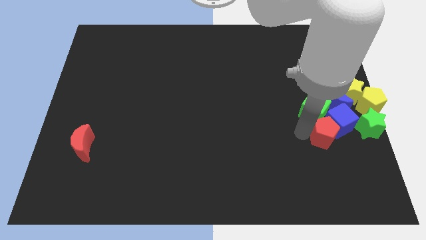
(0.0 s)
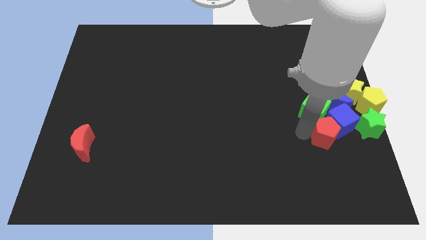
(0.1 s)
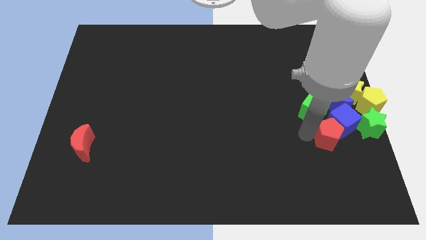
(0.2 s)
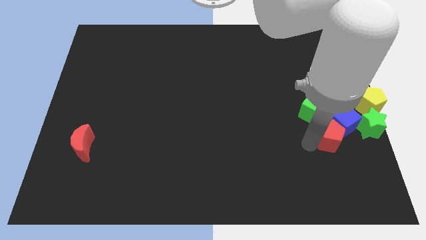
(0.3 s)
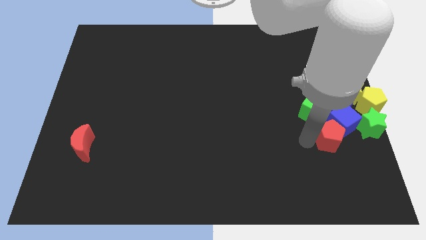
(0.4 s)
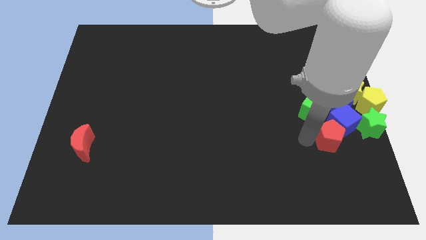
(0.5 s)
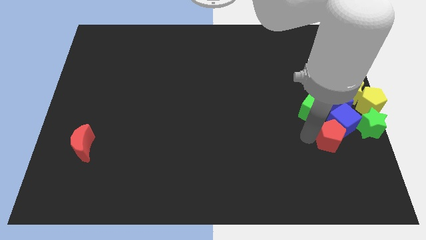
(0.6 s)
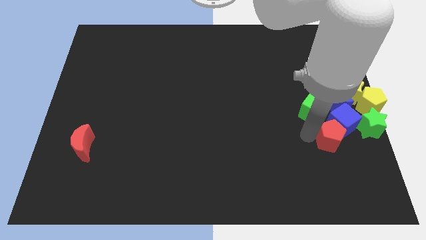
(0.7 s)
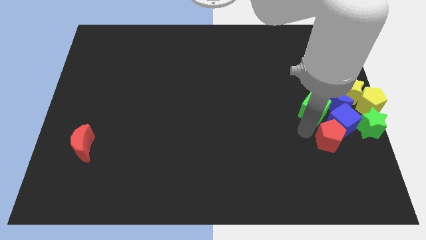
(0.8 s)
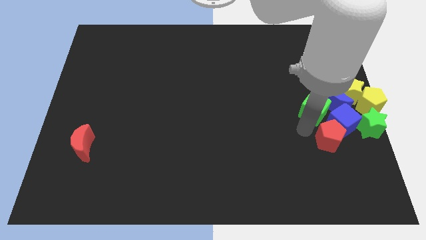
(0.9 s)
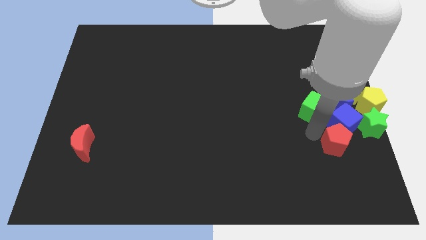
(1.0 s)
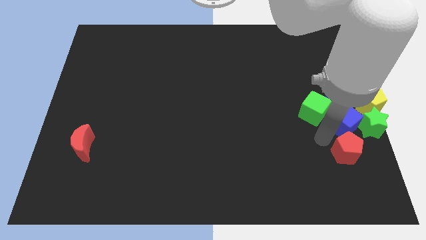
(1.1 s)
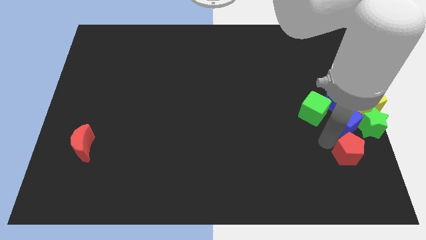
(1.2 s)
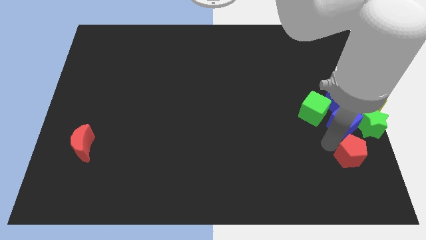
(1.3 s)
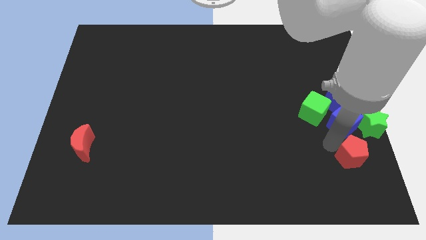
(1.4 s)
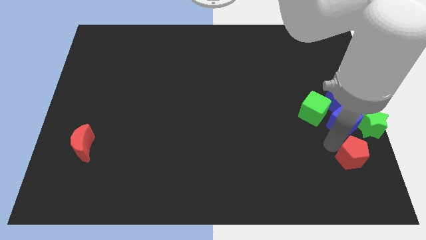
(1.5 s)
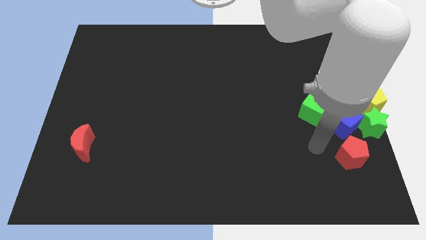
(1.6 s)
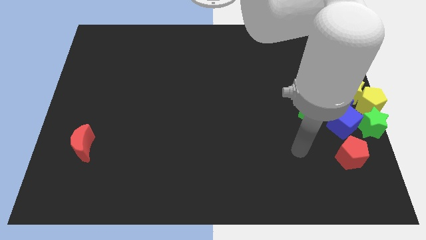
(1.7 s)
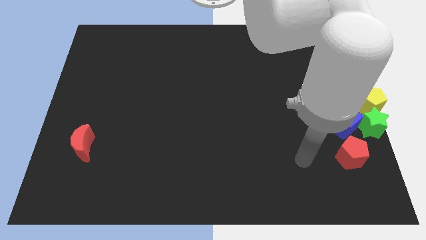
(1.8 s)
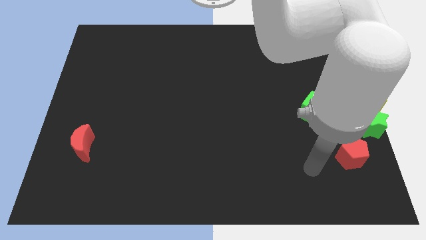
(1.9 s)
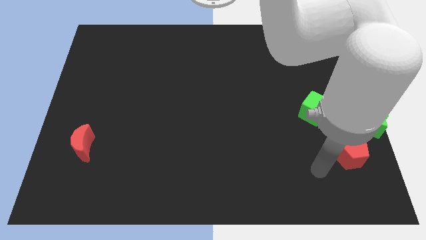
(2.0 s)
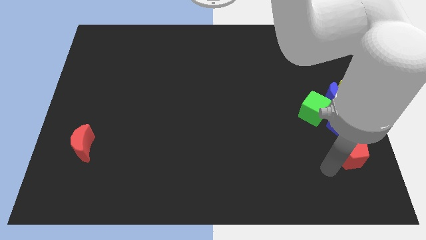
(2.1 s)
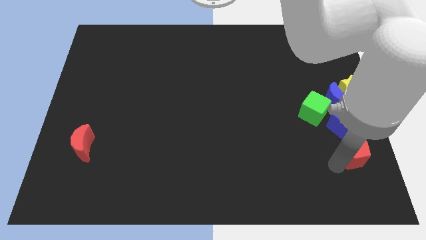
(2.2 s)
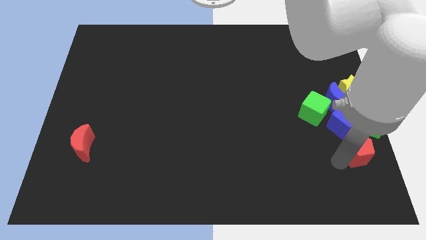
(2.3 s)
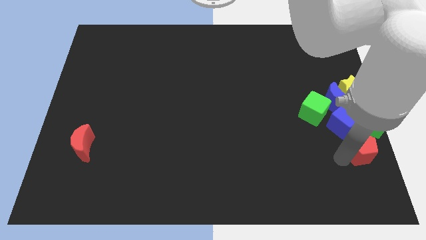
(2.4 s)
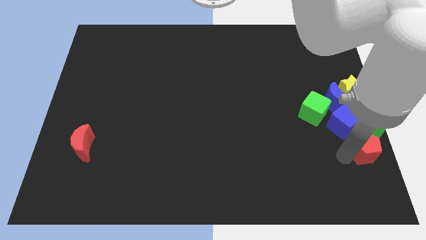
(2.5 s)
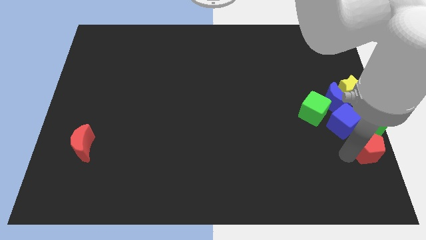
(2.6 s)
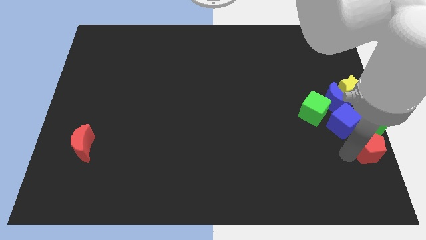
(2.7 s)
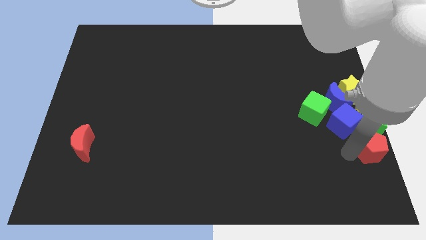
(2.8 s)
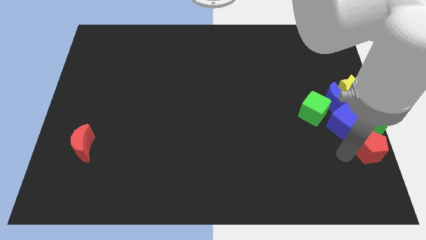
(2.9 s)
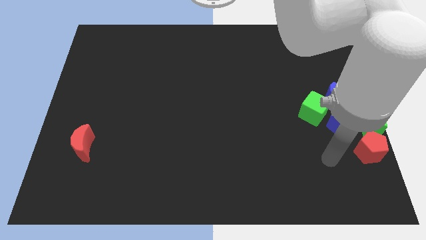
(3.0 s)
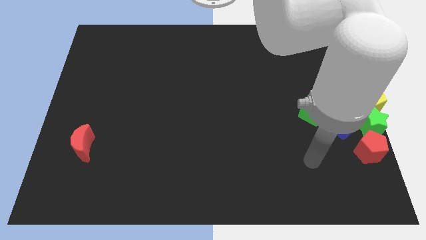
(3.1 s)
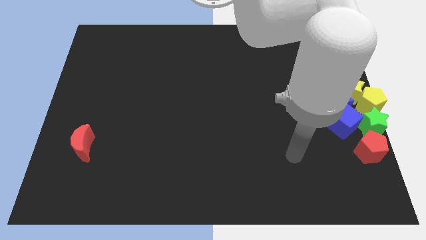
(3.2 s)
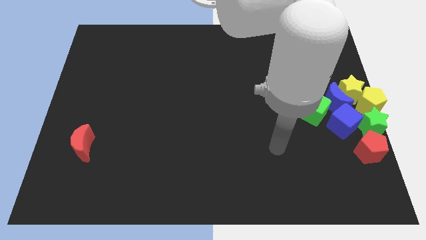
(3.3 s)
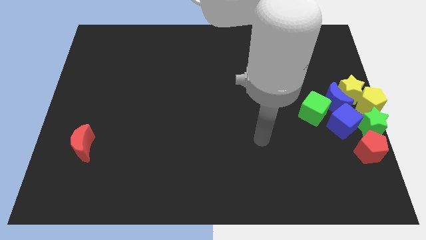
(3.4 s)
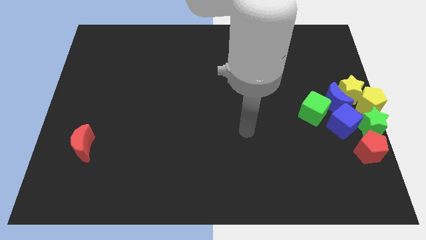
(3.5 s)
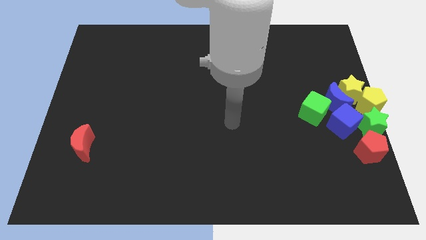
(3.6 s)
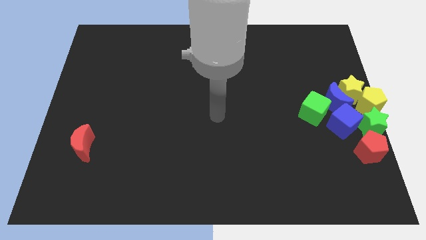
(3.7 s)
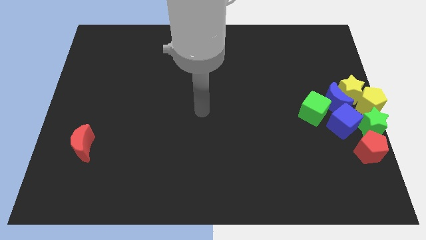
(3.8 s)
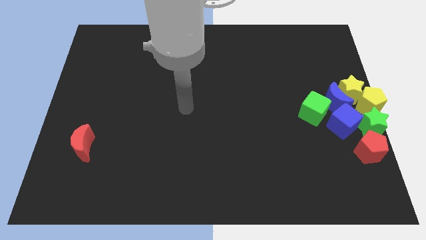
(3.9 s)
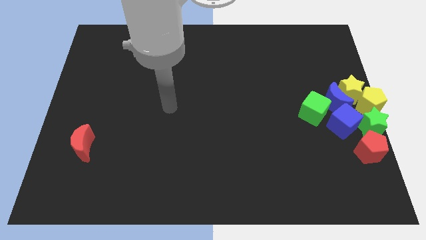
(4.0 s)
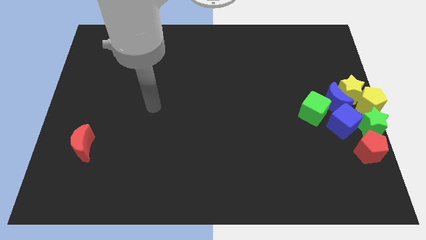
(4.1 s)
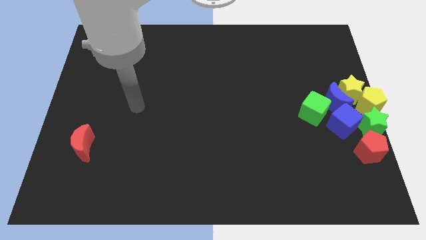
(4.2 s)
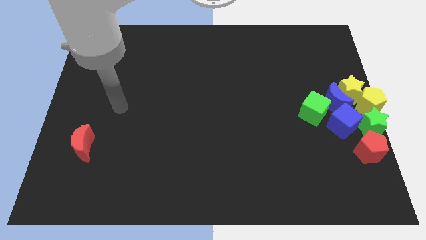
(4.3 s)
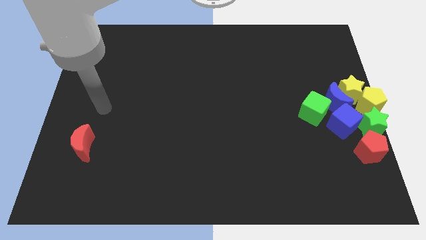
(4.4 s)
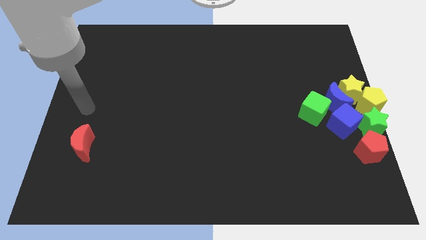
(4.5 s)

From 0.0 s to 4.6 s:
move the red pentagon bottom to the green star

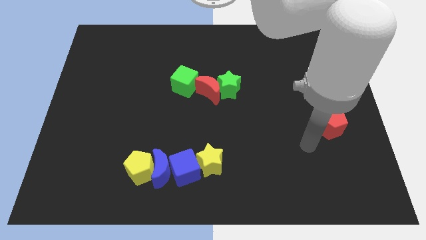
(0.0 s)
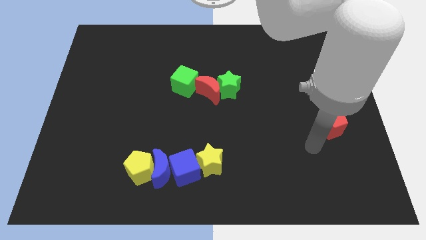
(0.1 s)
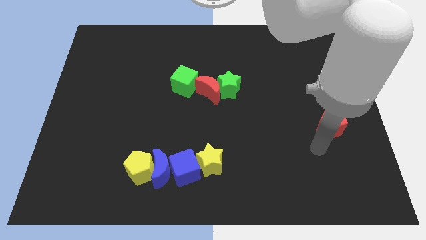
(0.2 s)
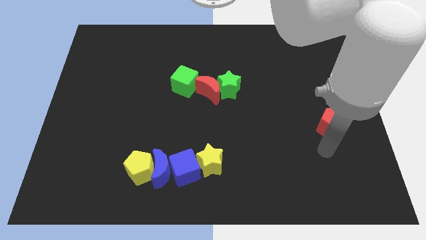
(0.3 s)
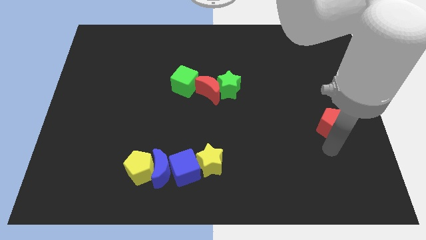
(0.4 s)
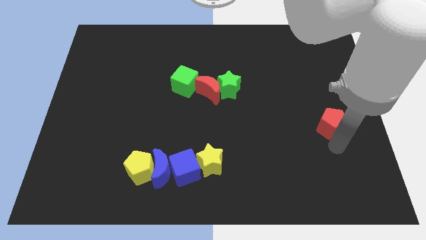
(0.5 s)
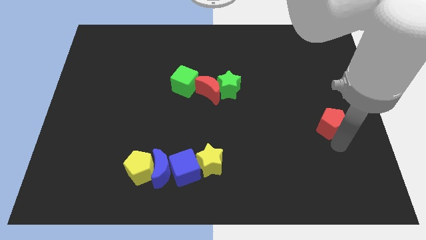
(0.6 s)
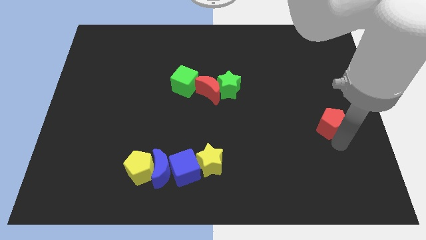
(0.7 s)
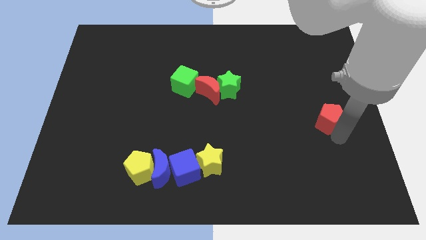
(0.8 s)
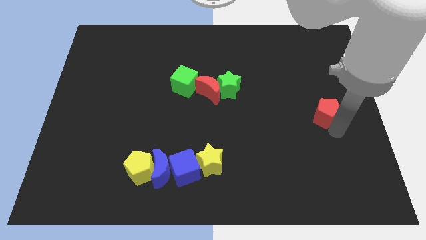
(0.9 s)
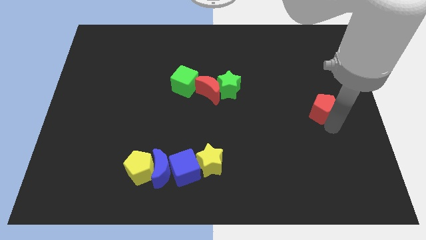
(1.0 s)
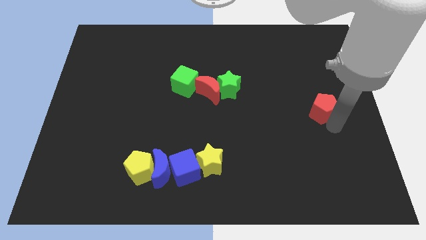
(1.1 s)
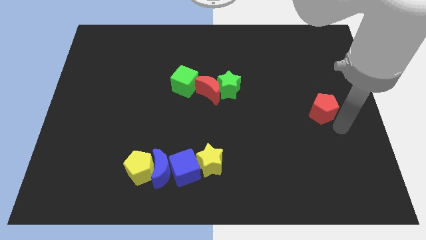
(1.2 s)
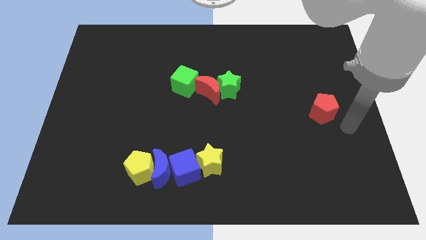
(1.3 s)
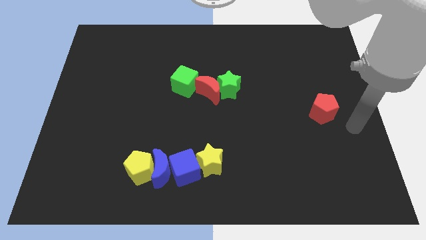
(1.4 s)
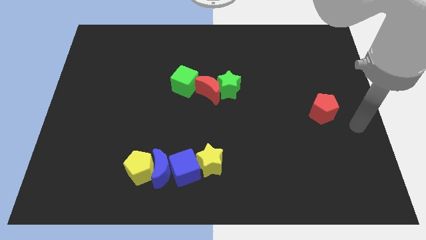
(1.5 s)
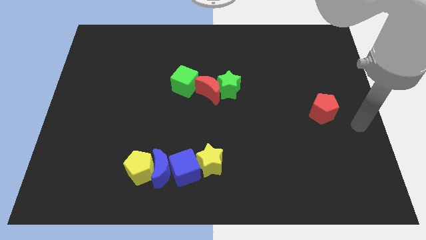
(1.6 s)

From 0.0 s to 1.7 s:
move the red pentagon slightly up

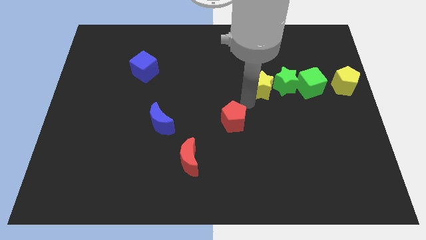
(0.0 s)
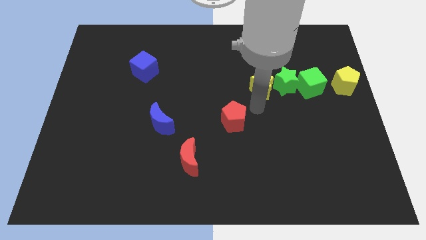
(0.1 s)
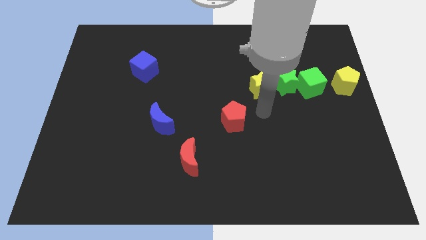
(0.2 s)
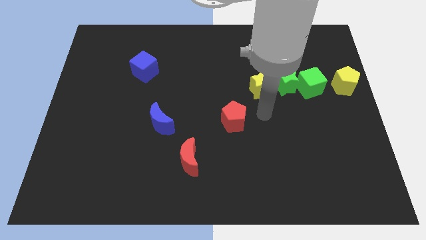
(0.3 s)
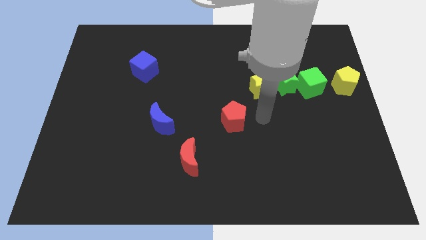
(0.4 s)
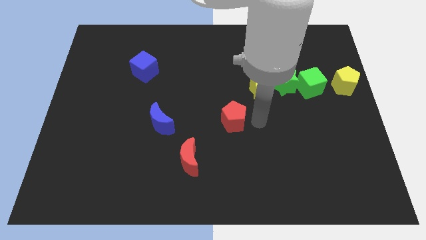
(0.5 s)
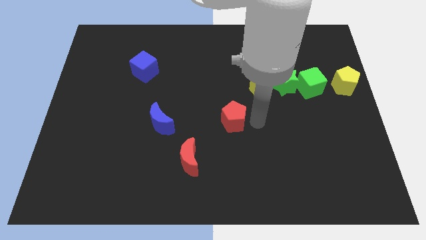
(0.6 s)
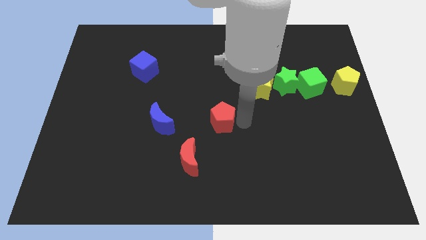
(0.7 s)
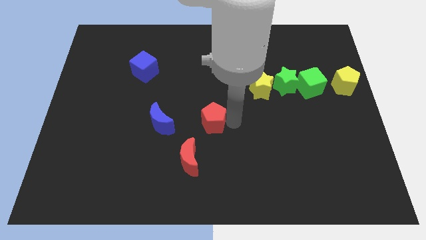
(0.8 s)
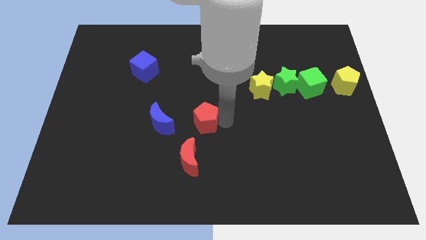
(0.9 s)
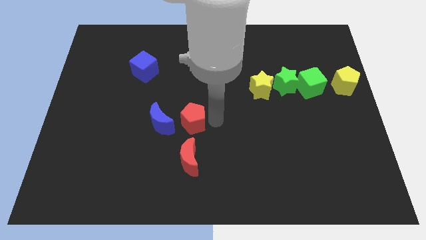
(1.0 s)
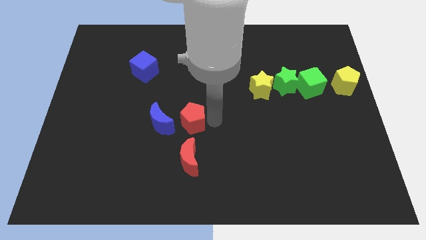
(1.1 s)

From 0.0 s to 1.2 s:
drag red pentagon beside blue moon

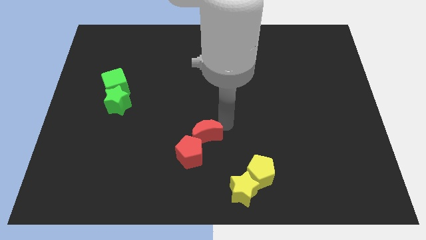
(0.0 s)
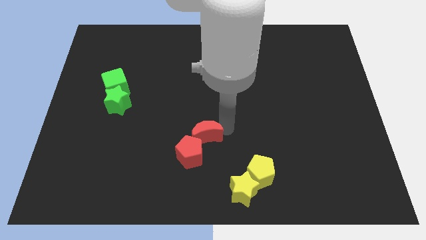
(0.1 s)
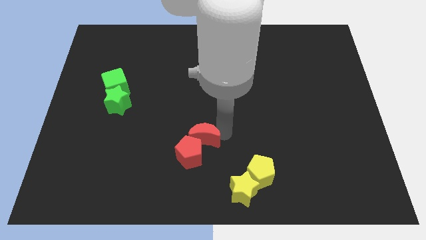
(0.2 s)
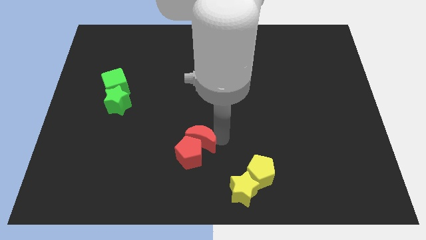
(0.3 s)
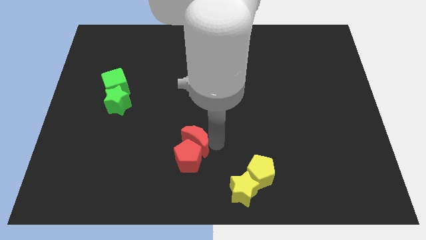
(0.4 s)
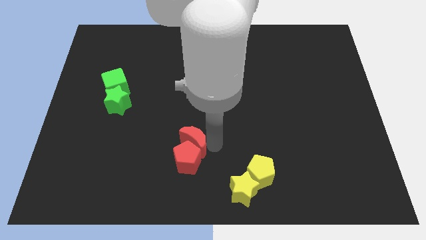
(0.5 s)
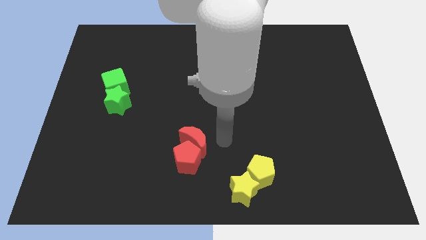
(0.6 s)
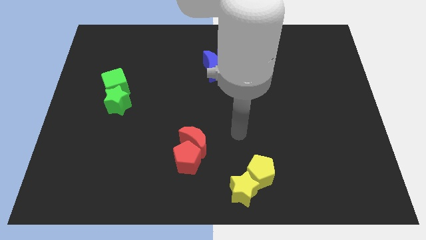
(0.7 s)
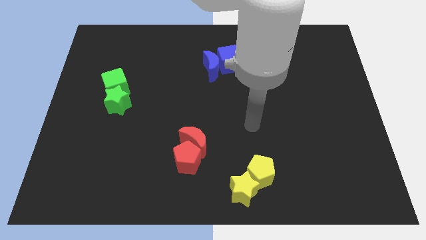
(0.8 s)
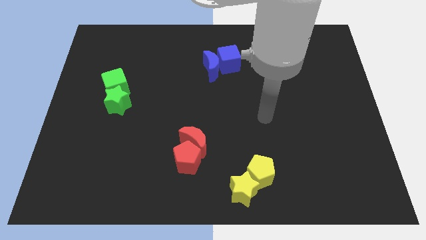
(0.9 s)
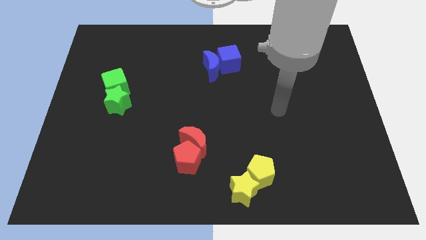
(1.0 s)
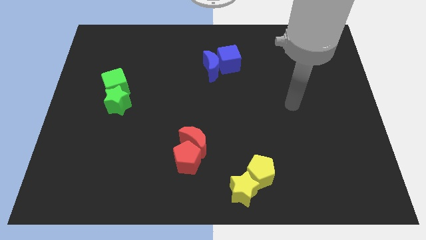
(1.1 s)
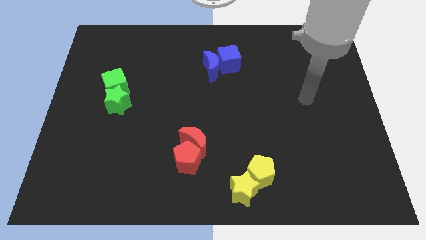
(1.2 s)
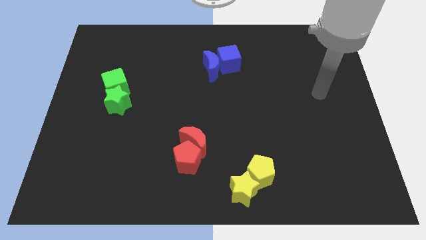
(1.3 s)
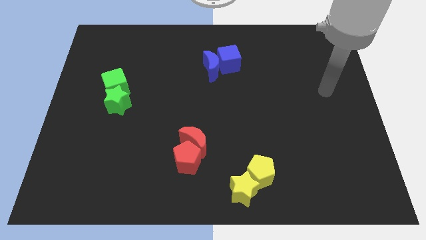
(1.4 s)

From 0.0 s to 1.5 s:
move the red crescent into the red pentagon
